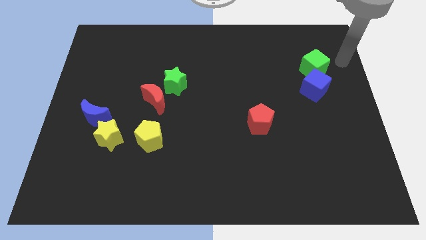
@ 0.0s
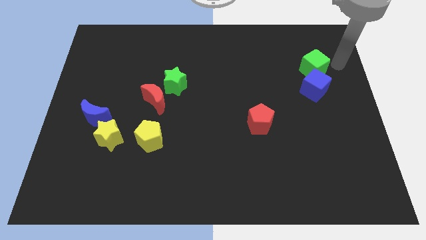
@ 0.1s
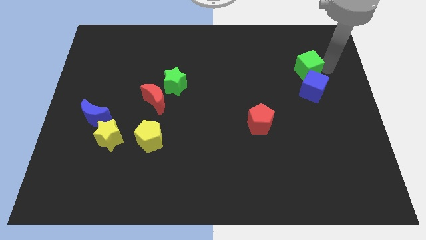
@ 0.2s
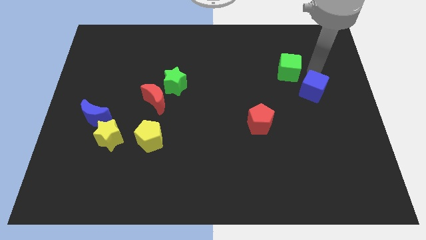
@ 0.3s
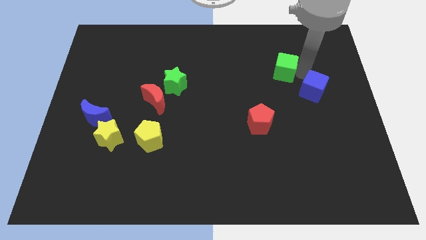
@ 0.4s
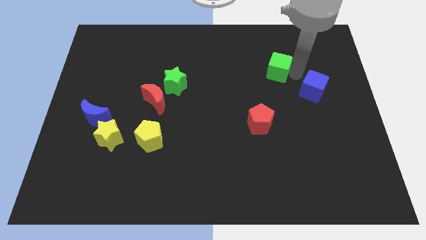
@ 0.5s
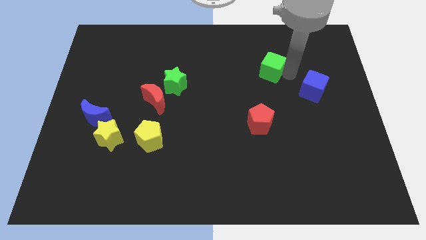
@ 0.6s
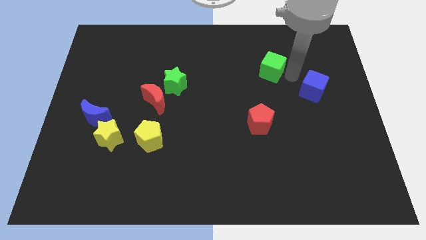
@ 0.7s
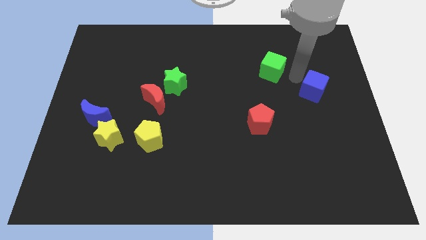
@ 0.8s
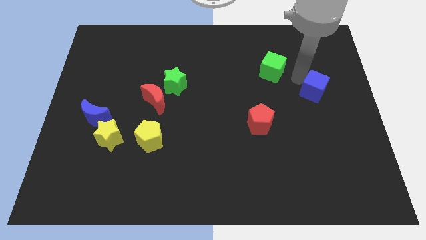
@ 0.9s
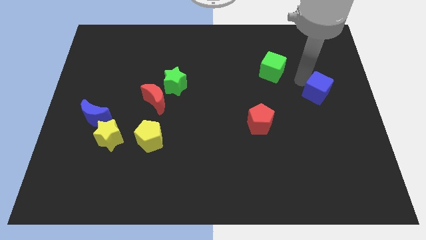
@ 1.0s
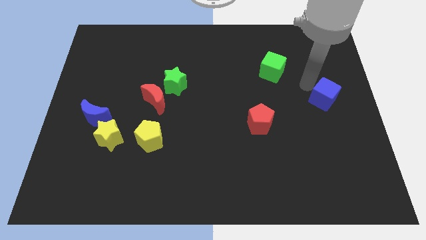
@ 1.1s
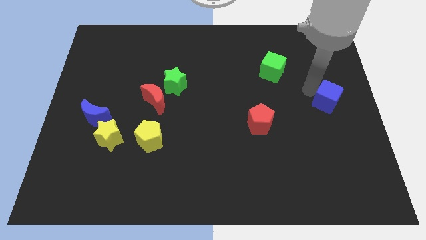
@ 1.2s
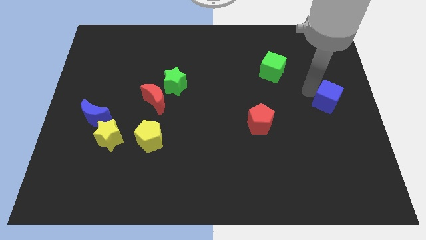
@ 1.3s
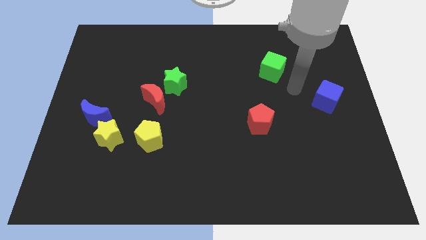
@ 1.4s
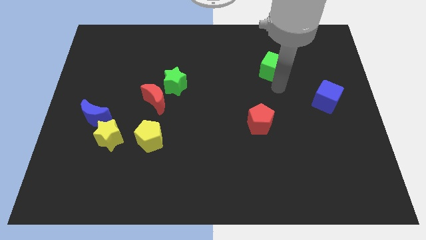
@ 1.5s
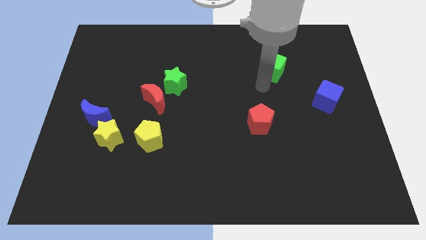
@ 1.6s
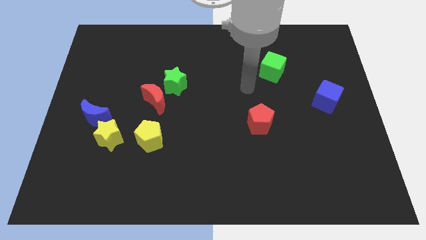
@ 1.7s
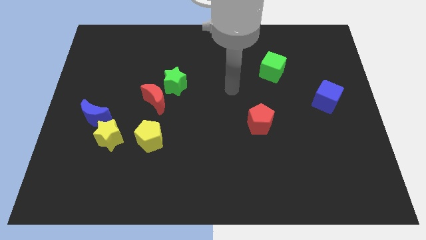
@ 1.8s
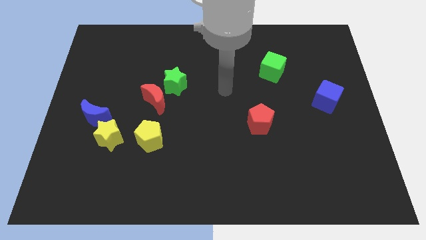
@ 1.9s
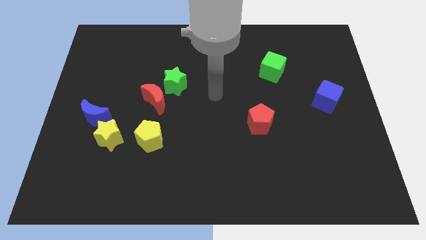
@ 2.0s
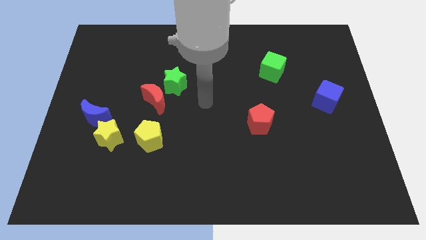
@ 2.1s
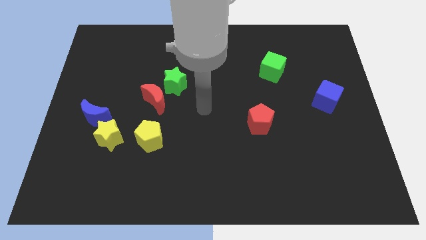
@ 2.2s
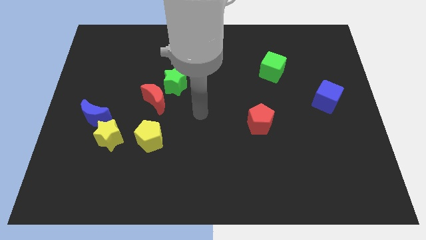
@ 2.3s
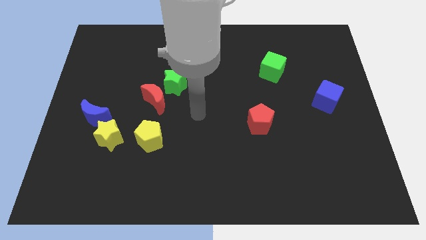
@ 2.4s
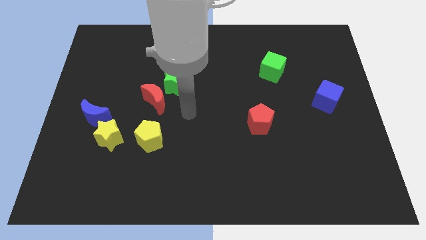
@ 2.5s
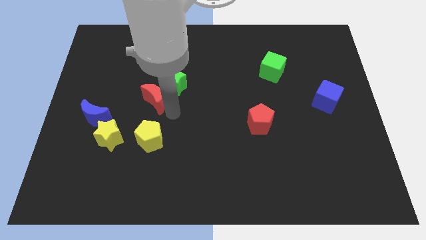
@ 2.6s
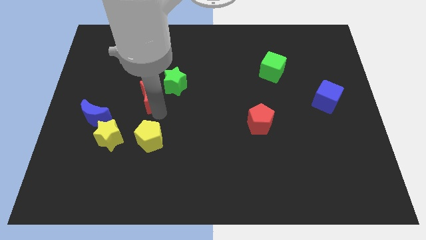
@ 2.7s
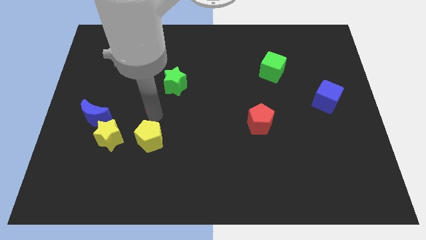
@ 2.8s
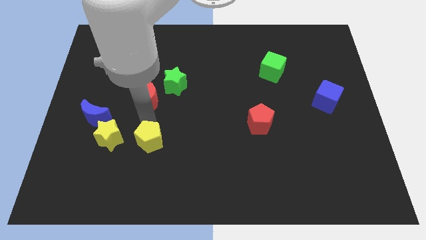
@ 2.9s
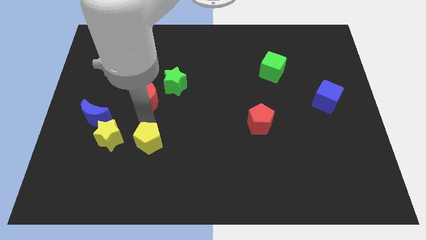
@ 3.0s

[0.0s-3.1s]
push your arm towards the yellow pentagon

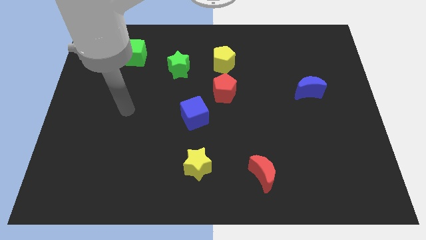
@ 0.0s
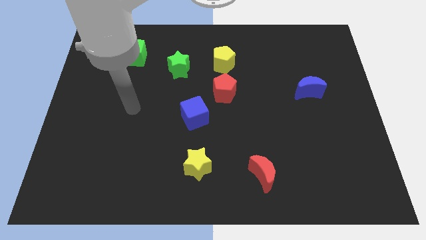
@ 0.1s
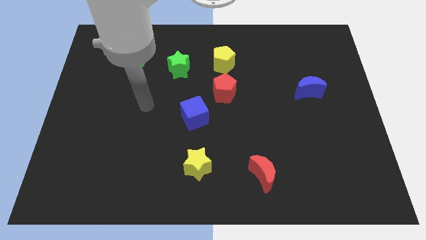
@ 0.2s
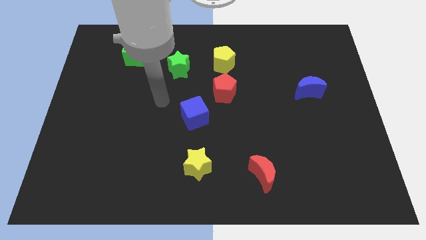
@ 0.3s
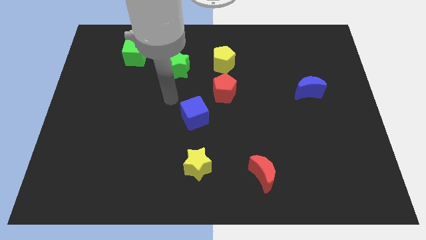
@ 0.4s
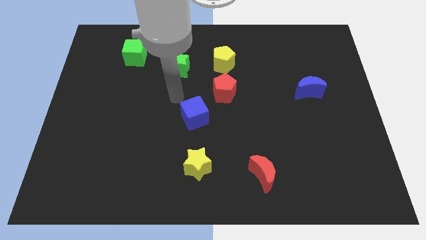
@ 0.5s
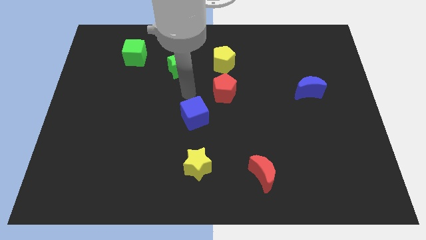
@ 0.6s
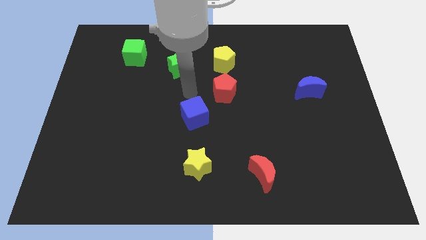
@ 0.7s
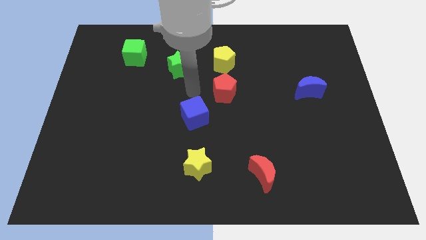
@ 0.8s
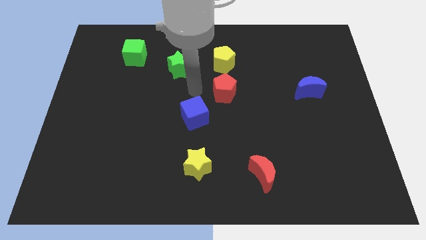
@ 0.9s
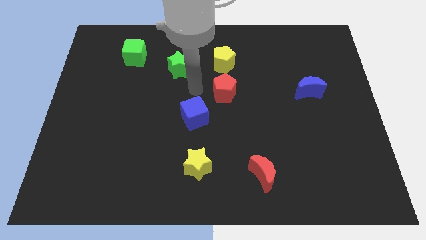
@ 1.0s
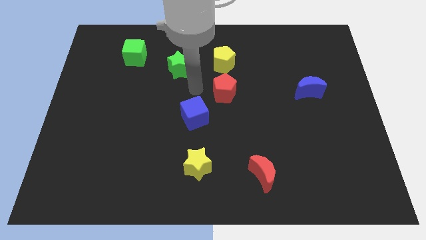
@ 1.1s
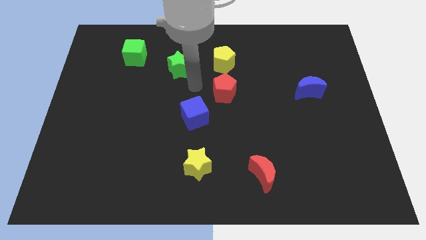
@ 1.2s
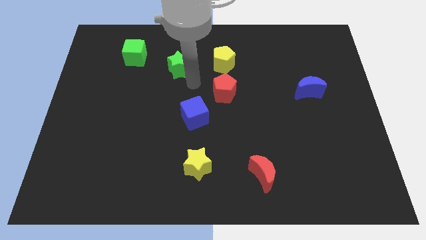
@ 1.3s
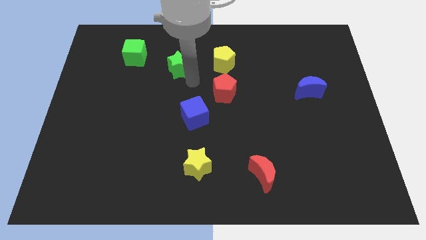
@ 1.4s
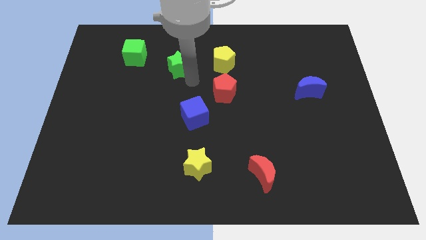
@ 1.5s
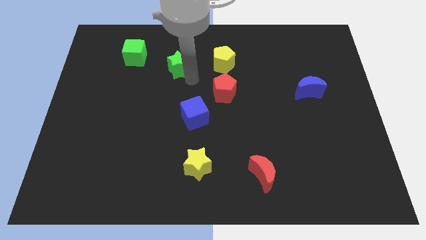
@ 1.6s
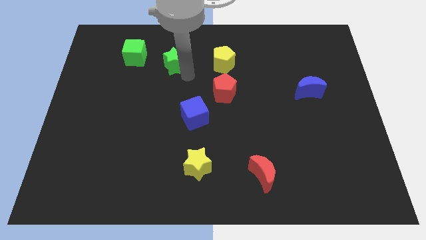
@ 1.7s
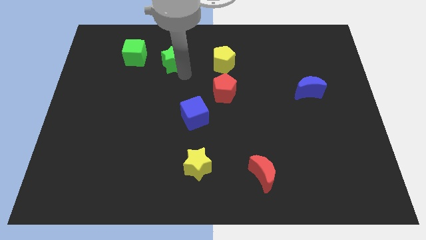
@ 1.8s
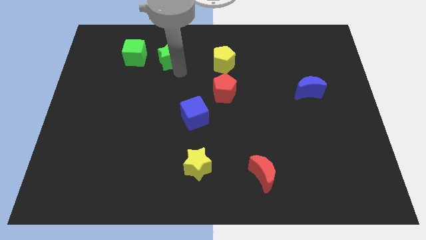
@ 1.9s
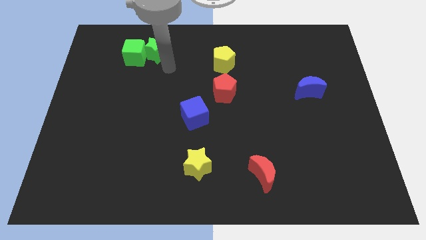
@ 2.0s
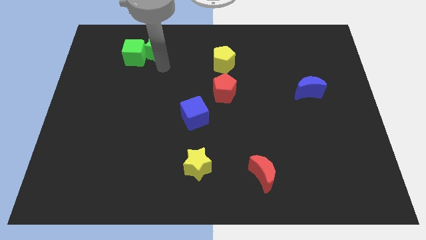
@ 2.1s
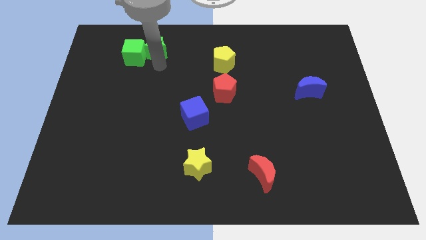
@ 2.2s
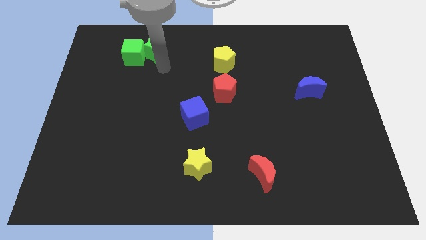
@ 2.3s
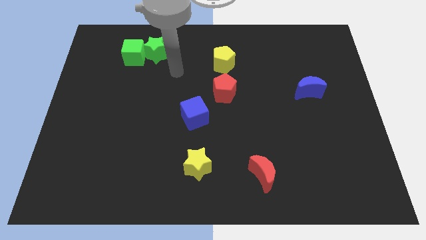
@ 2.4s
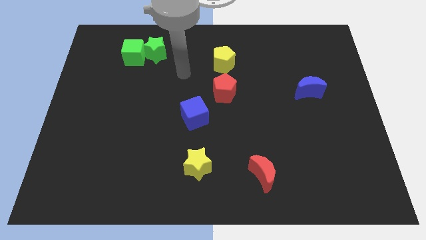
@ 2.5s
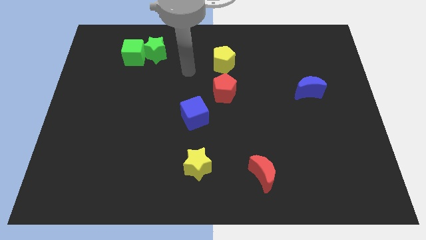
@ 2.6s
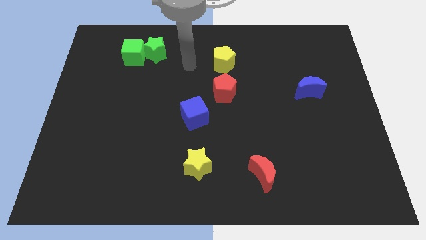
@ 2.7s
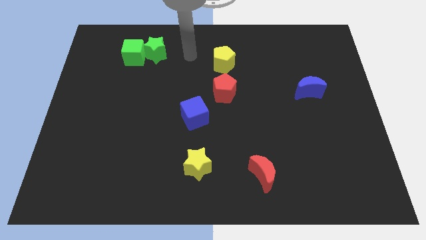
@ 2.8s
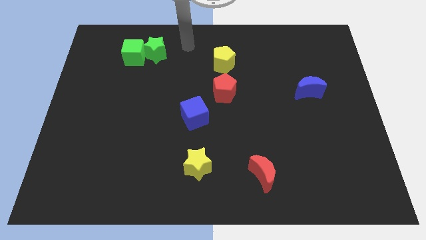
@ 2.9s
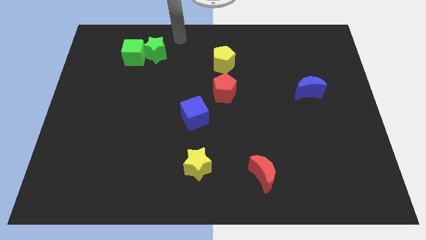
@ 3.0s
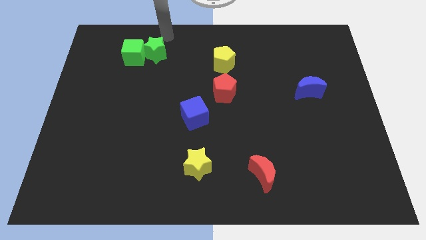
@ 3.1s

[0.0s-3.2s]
place the green star to the right of green cube

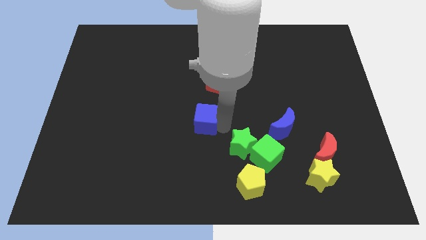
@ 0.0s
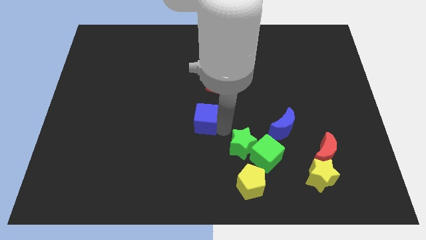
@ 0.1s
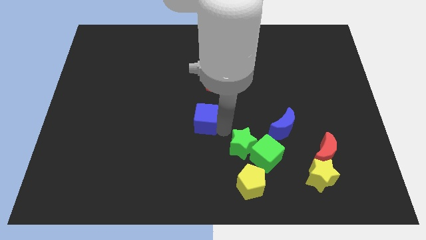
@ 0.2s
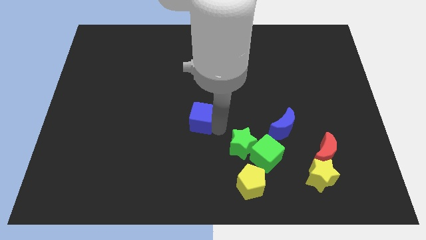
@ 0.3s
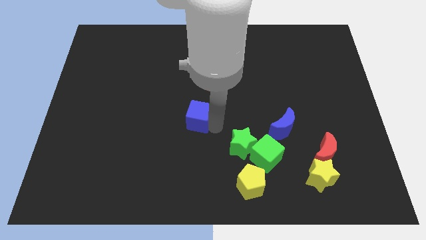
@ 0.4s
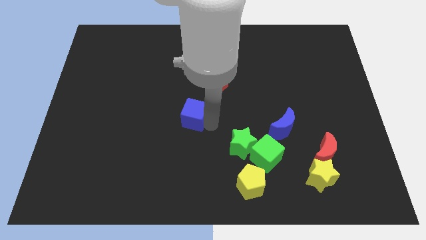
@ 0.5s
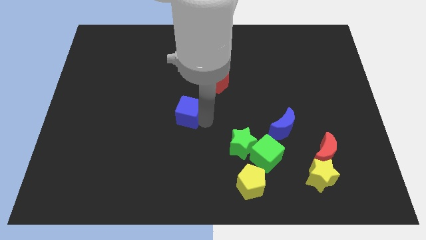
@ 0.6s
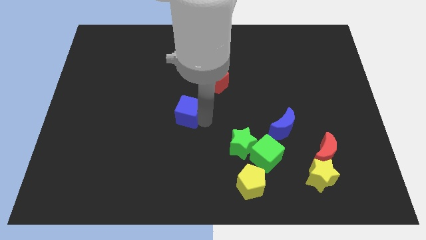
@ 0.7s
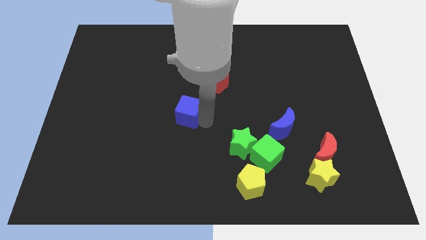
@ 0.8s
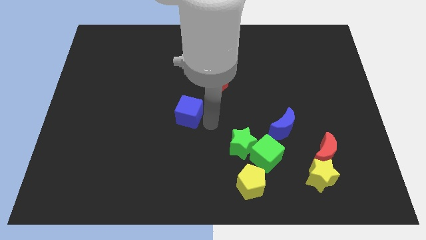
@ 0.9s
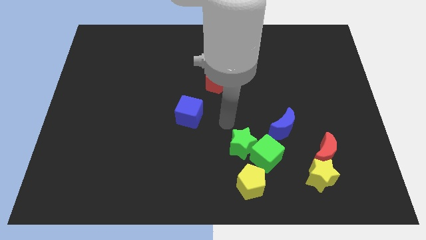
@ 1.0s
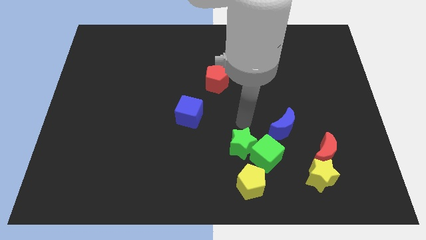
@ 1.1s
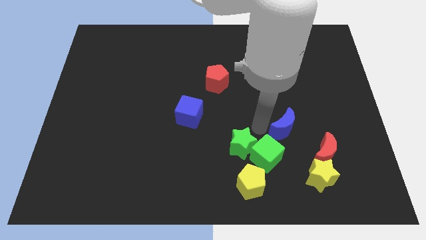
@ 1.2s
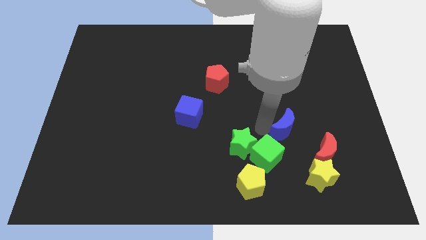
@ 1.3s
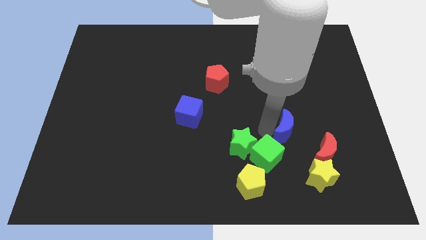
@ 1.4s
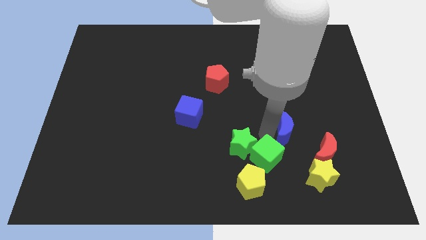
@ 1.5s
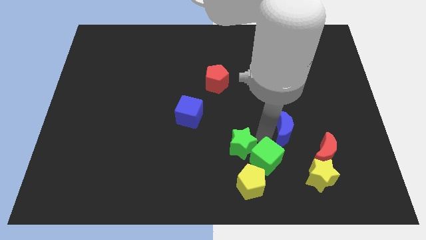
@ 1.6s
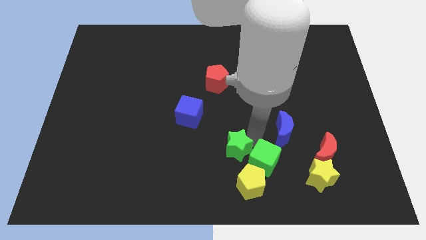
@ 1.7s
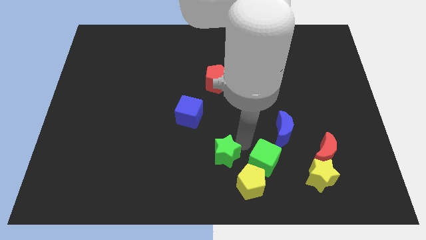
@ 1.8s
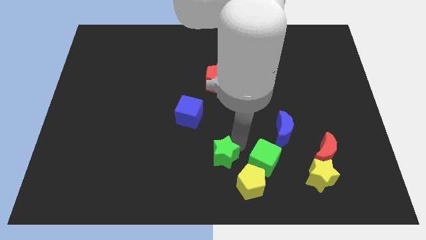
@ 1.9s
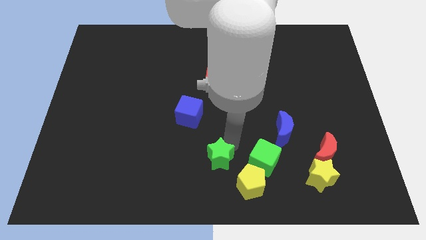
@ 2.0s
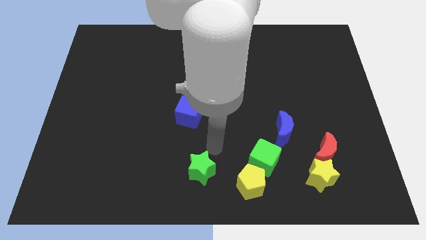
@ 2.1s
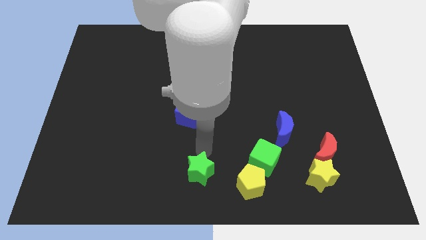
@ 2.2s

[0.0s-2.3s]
push the green star towards the bottom of the board

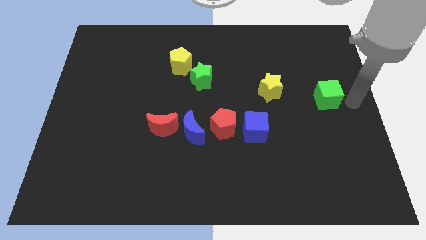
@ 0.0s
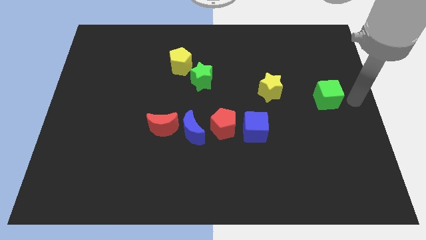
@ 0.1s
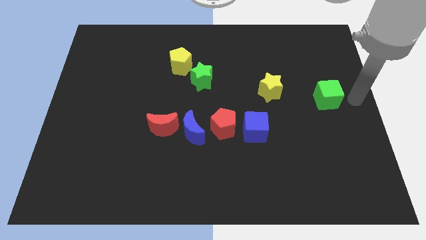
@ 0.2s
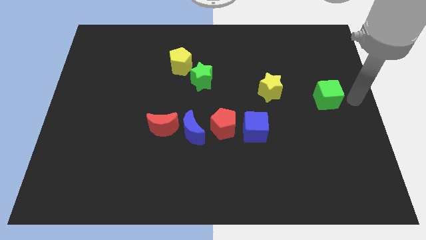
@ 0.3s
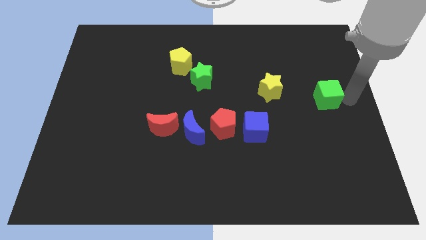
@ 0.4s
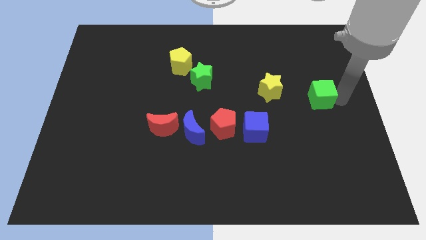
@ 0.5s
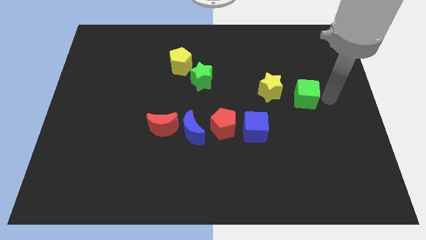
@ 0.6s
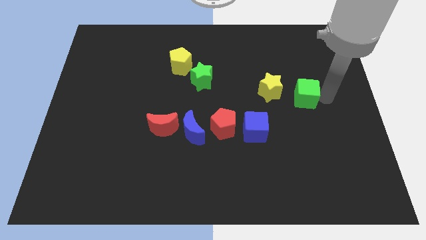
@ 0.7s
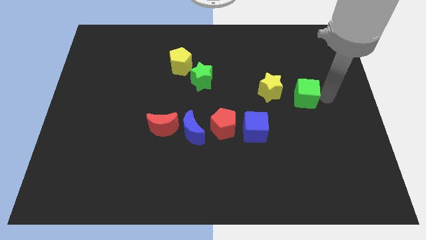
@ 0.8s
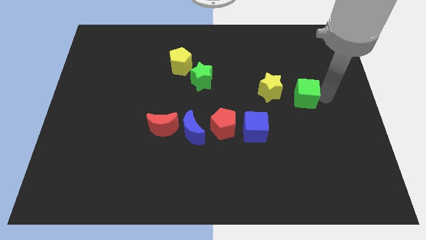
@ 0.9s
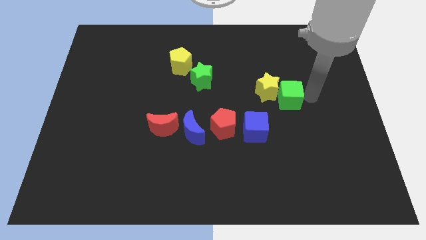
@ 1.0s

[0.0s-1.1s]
move the green cube into the yellow star
